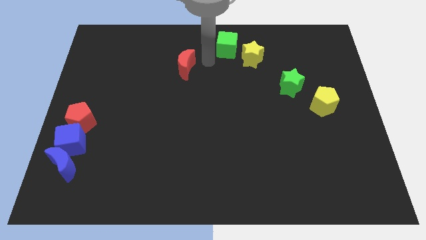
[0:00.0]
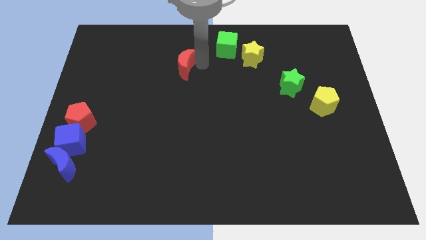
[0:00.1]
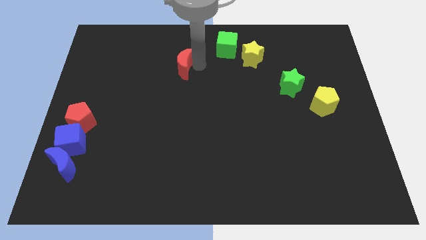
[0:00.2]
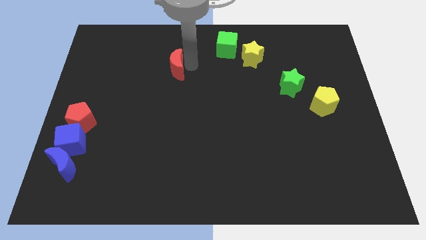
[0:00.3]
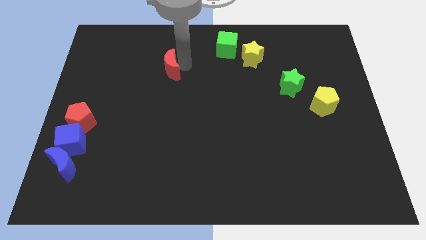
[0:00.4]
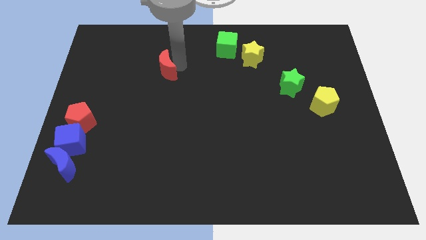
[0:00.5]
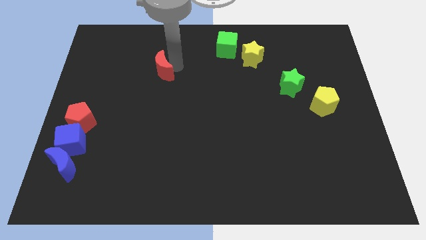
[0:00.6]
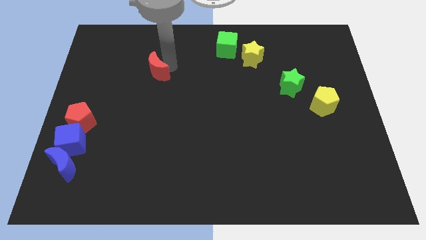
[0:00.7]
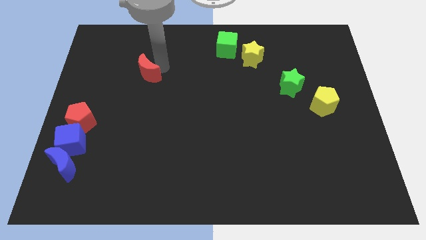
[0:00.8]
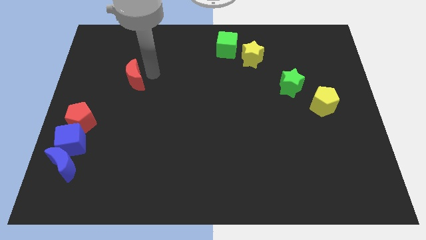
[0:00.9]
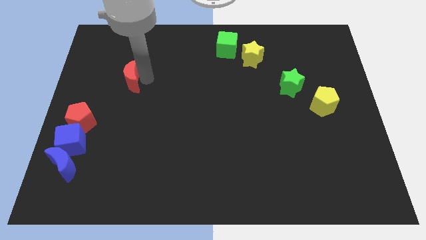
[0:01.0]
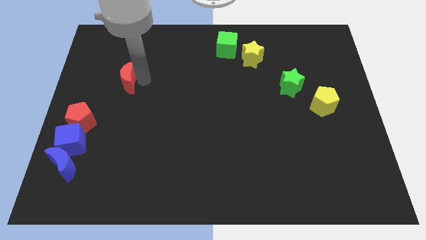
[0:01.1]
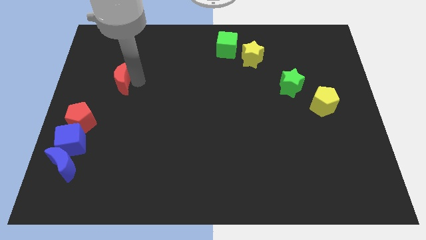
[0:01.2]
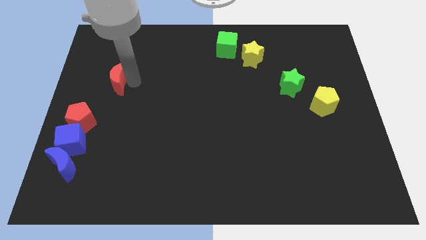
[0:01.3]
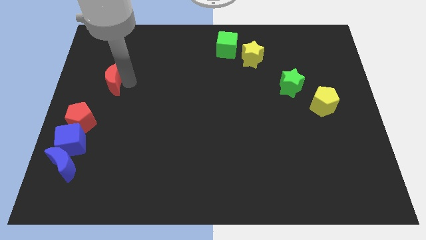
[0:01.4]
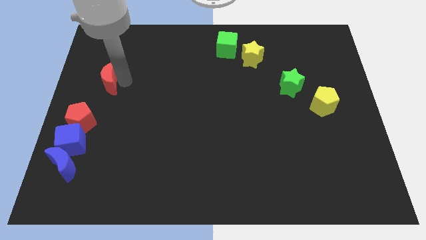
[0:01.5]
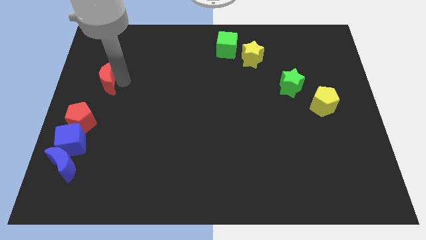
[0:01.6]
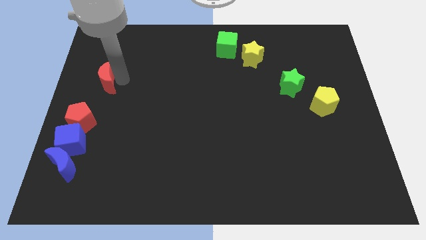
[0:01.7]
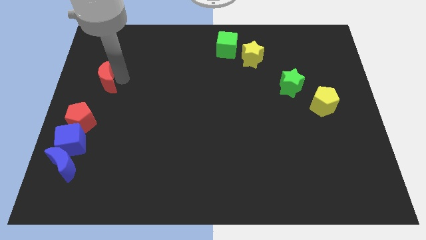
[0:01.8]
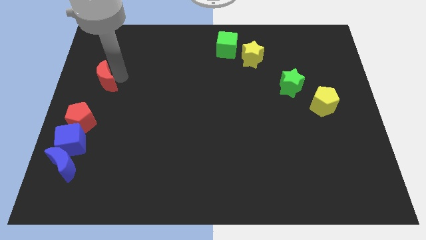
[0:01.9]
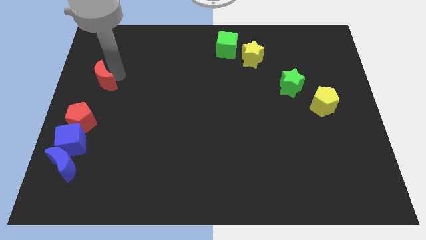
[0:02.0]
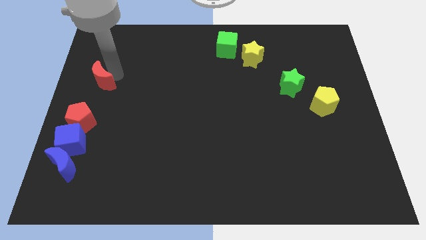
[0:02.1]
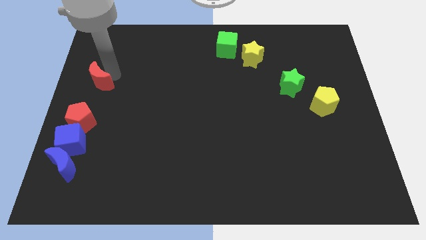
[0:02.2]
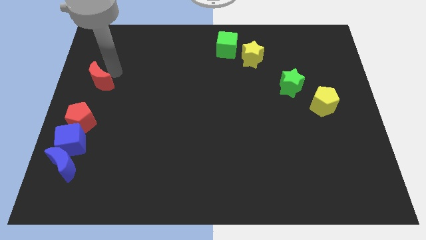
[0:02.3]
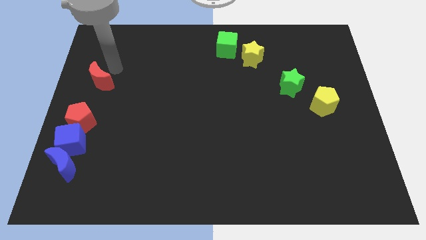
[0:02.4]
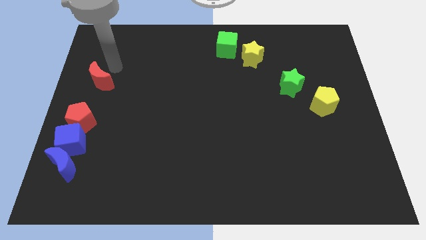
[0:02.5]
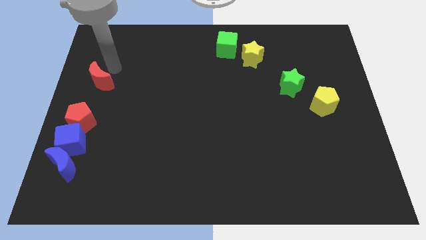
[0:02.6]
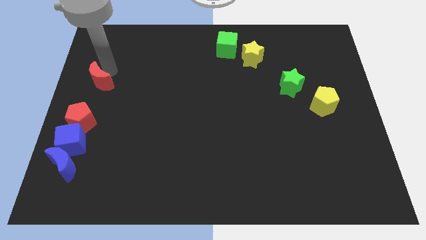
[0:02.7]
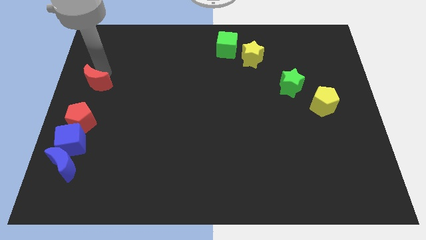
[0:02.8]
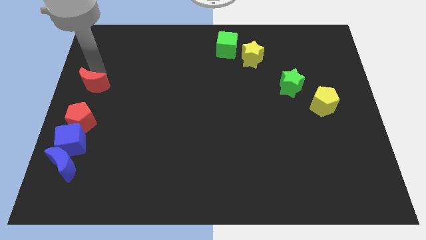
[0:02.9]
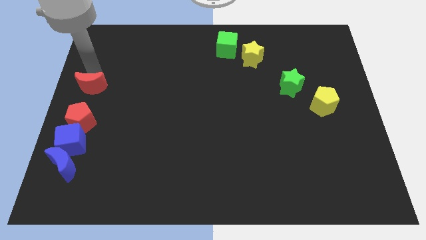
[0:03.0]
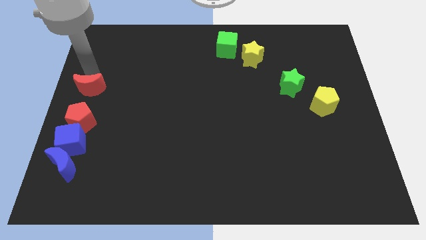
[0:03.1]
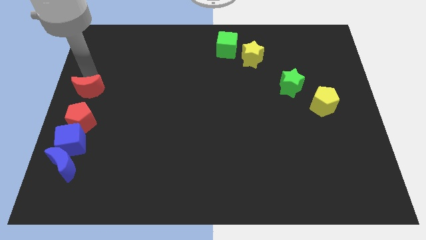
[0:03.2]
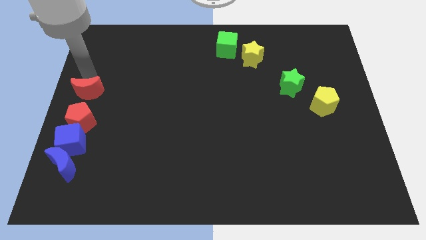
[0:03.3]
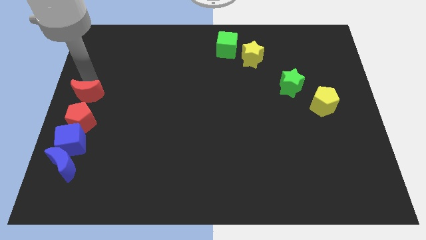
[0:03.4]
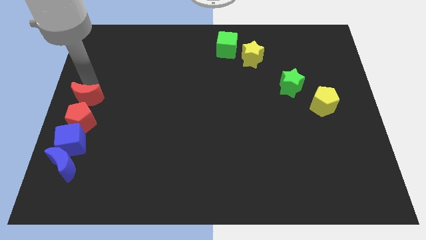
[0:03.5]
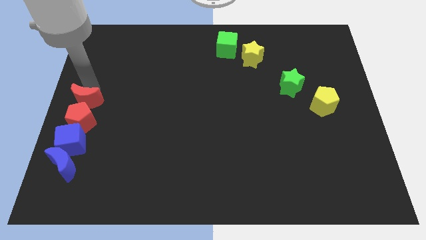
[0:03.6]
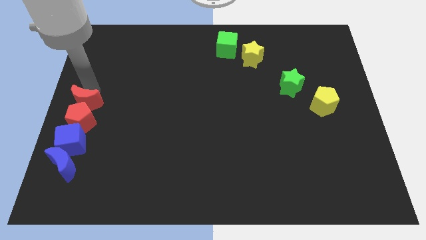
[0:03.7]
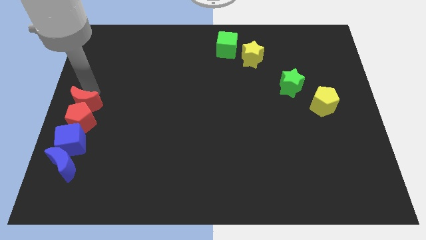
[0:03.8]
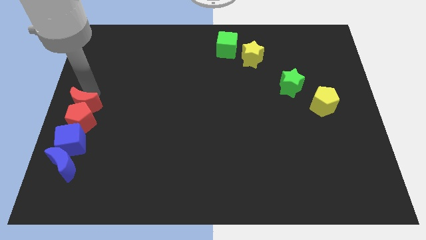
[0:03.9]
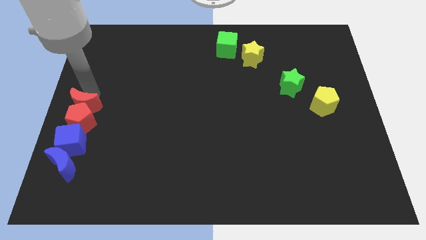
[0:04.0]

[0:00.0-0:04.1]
slide the red moon into the top side of the red pentagon

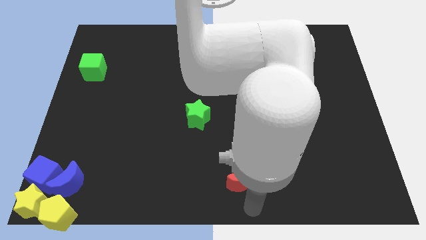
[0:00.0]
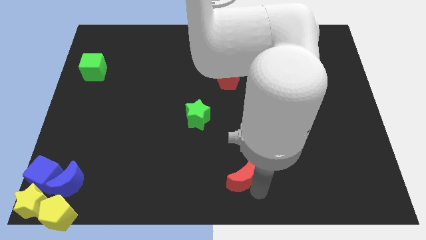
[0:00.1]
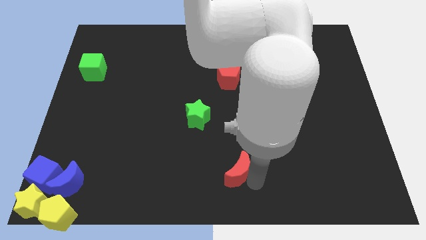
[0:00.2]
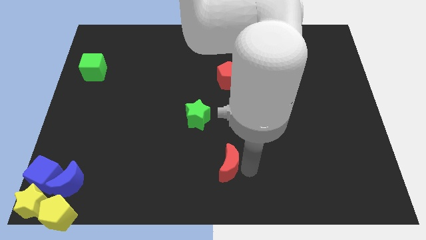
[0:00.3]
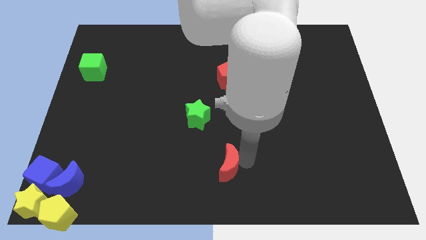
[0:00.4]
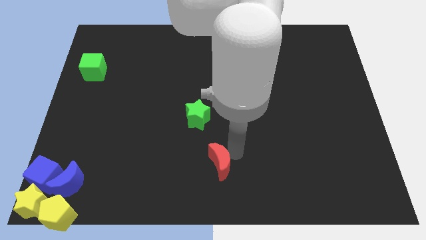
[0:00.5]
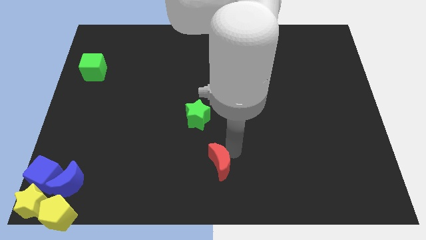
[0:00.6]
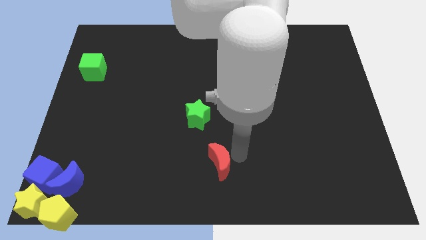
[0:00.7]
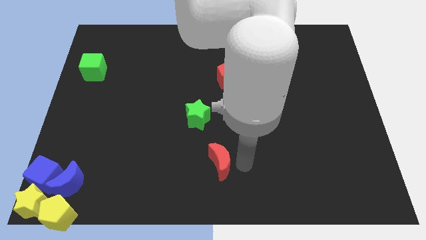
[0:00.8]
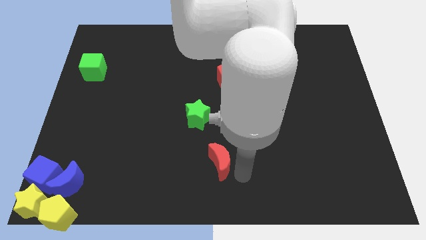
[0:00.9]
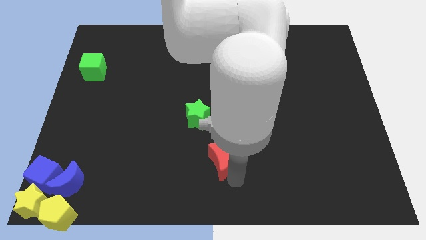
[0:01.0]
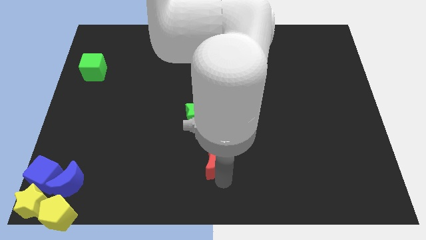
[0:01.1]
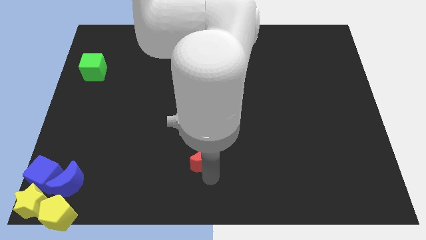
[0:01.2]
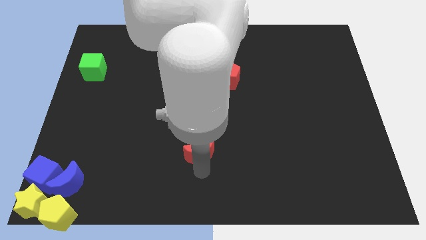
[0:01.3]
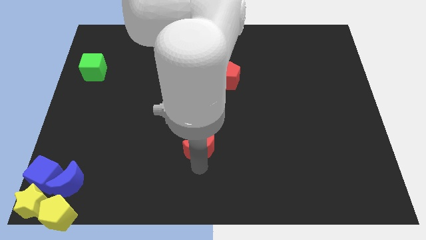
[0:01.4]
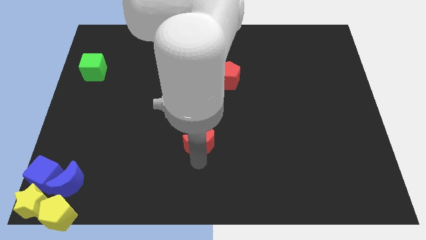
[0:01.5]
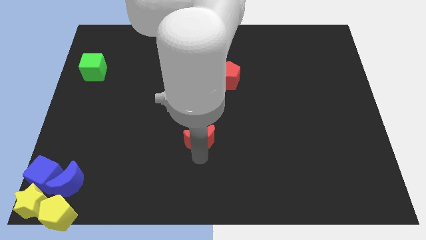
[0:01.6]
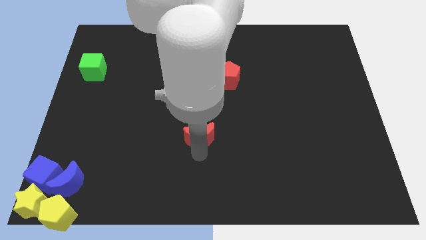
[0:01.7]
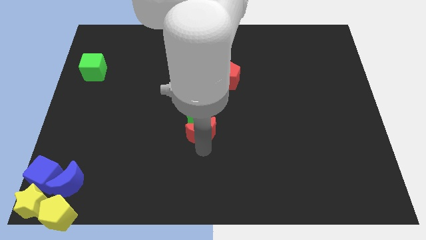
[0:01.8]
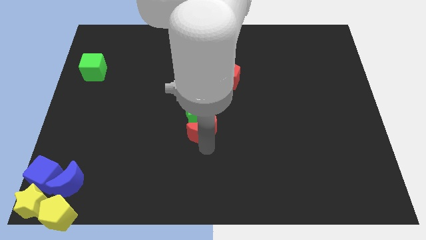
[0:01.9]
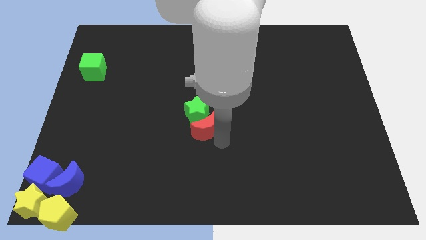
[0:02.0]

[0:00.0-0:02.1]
add red moon into green star

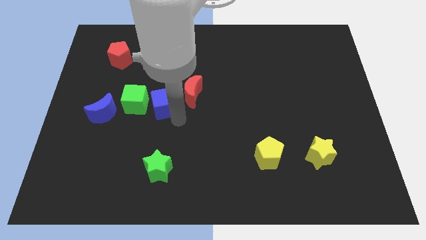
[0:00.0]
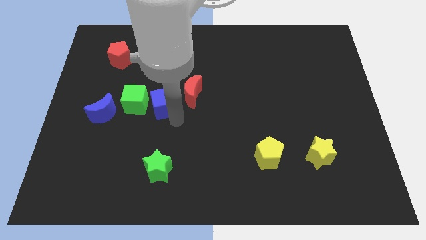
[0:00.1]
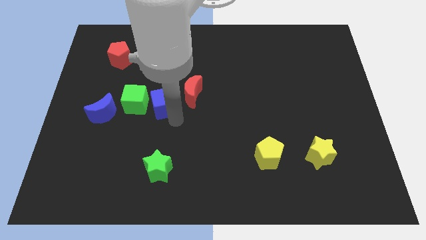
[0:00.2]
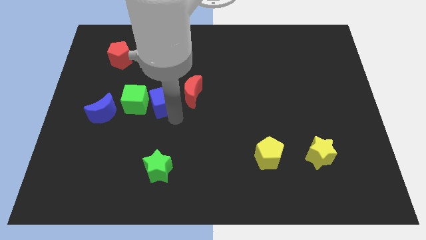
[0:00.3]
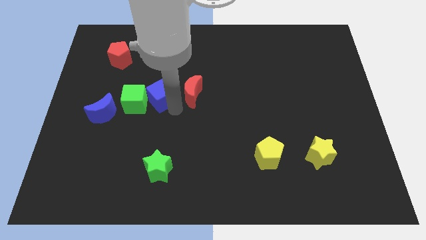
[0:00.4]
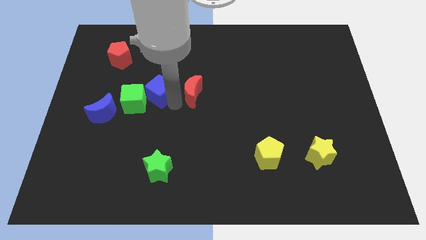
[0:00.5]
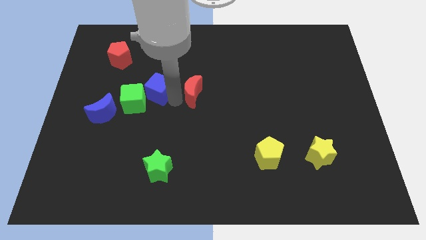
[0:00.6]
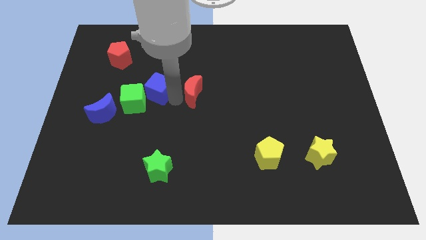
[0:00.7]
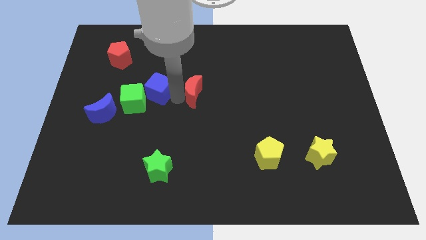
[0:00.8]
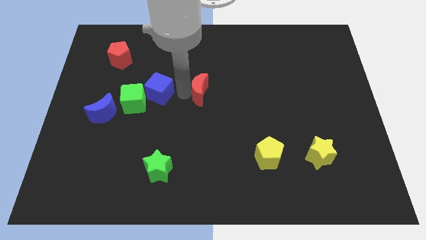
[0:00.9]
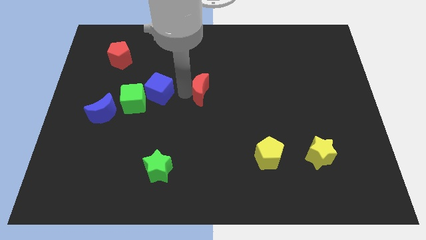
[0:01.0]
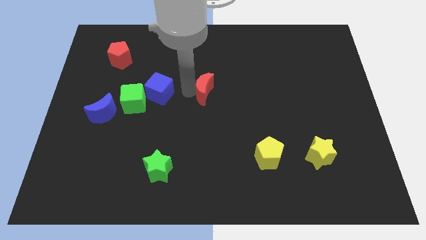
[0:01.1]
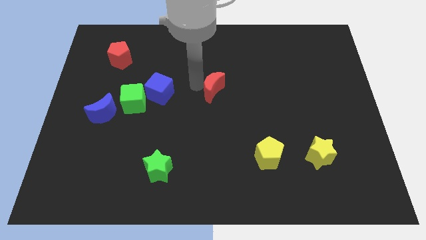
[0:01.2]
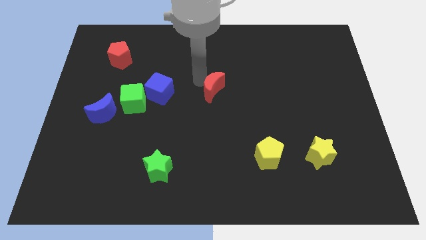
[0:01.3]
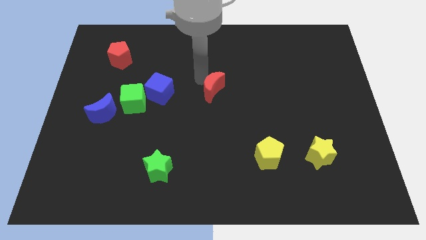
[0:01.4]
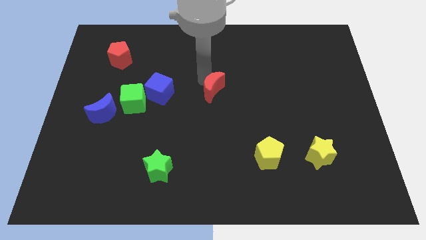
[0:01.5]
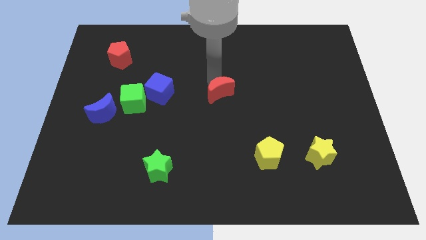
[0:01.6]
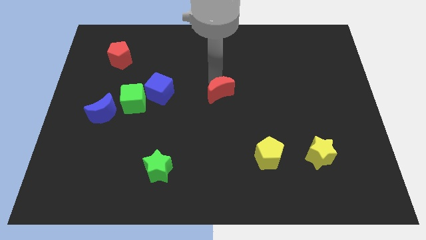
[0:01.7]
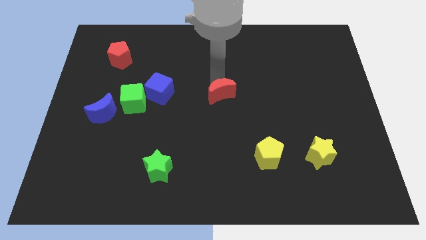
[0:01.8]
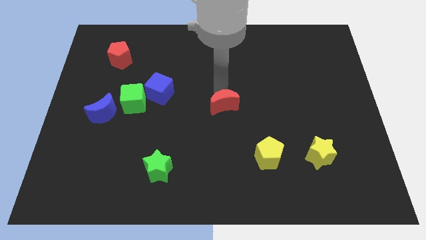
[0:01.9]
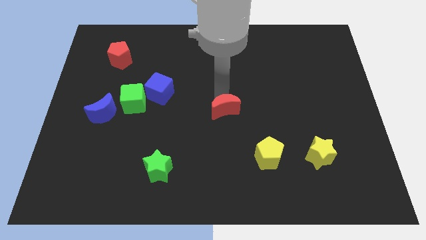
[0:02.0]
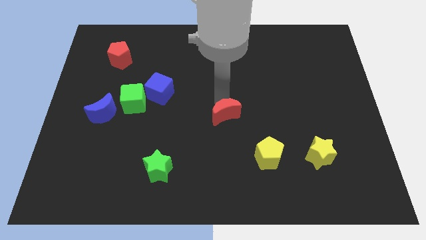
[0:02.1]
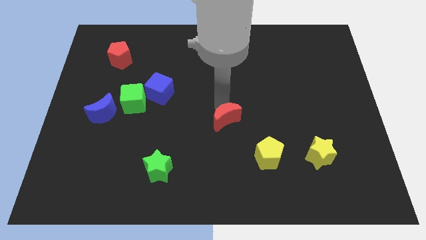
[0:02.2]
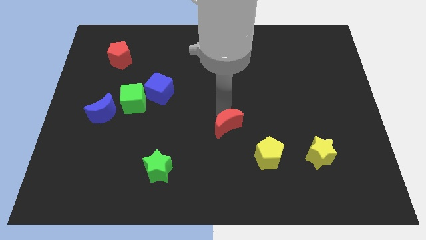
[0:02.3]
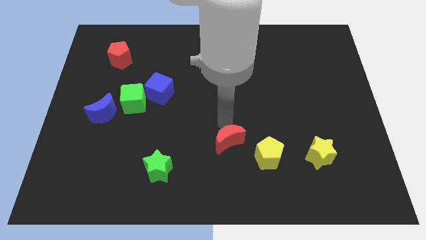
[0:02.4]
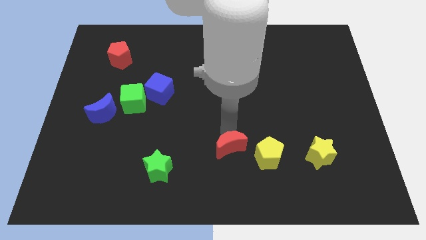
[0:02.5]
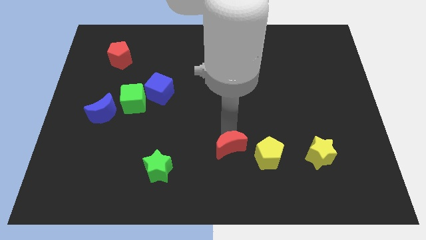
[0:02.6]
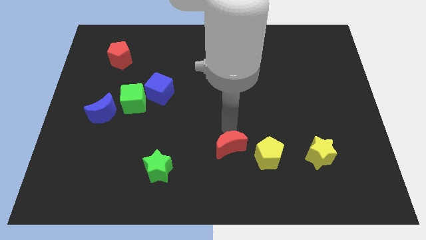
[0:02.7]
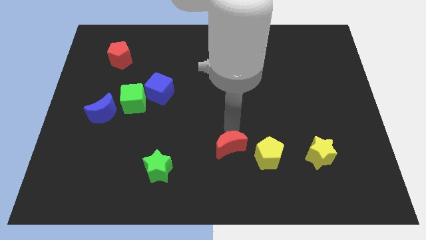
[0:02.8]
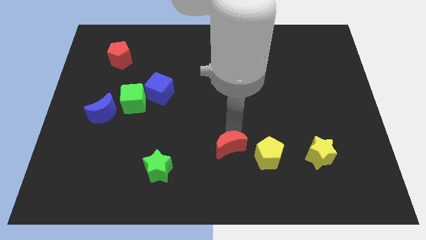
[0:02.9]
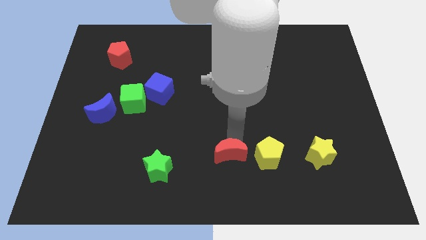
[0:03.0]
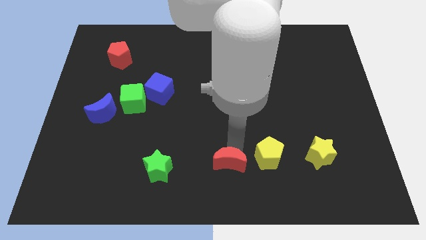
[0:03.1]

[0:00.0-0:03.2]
move red moon left to yellow pentagon
